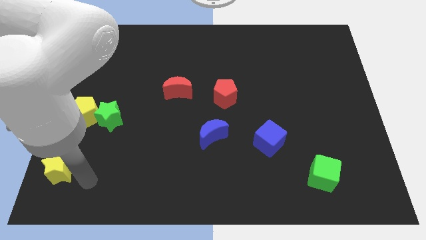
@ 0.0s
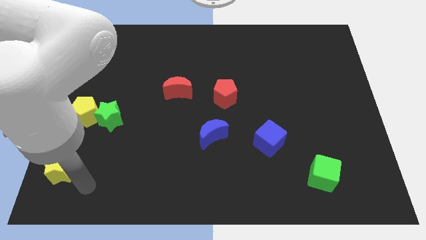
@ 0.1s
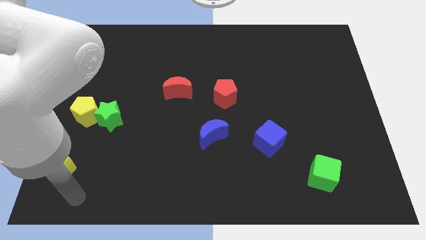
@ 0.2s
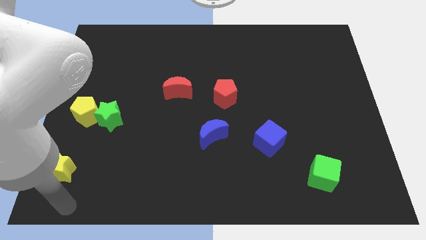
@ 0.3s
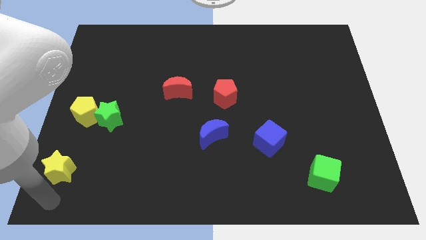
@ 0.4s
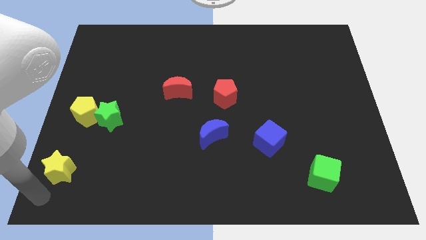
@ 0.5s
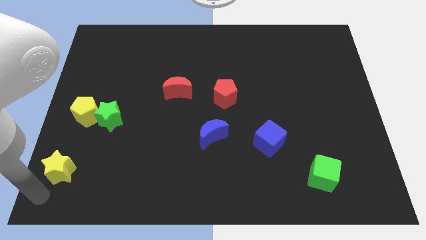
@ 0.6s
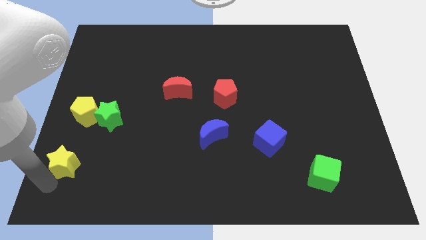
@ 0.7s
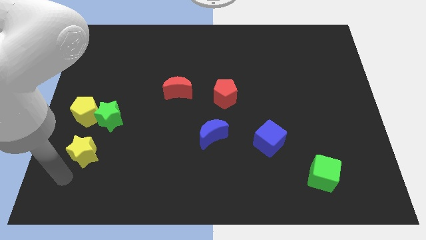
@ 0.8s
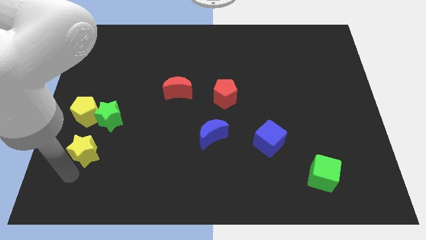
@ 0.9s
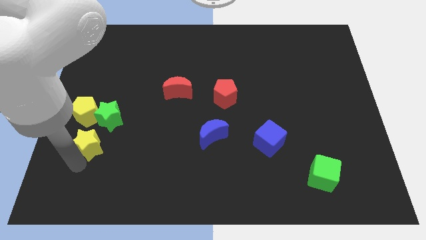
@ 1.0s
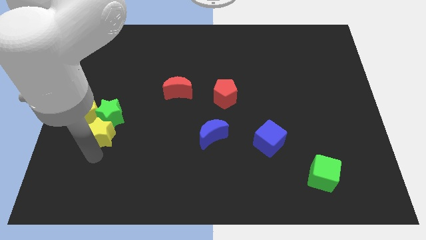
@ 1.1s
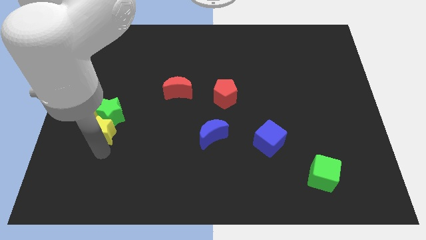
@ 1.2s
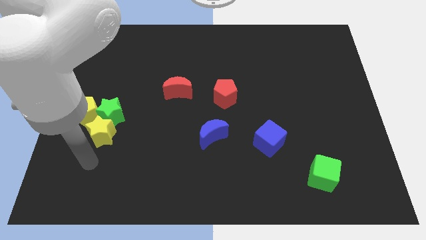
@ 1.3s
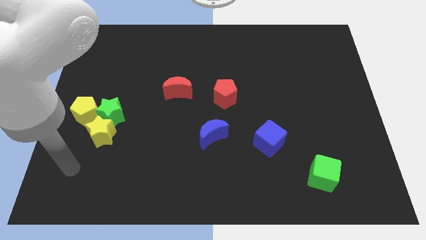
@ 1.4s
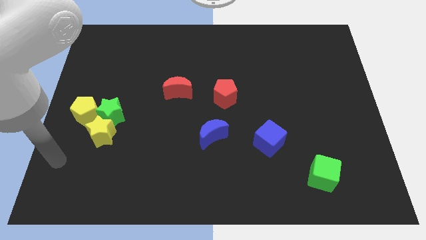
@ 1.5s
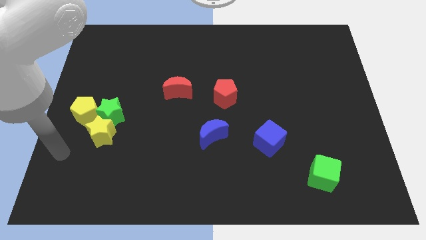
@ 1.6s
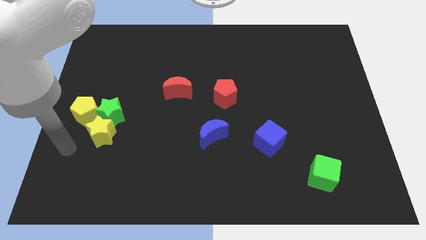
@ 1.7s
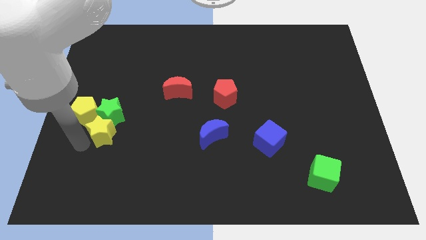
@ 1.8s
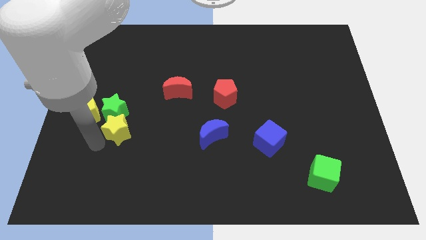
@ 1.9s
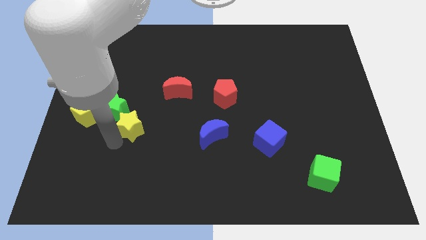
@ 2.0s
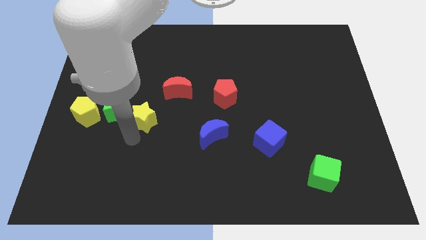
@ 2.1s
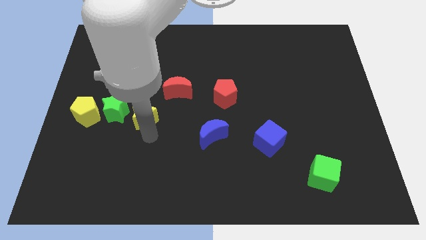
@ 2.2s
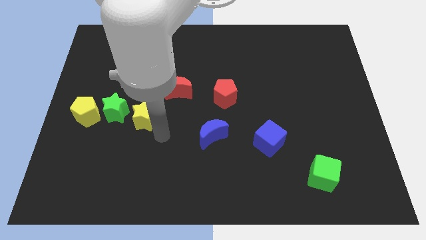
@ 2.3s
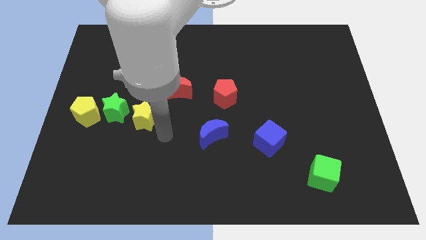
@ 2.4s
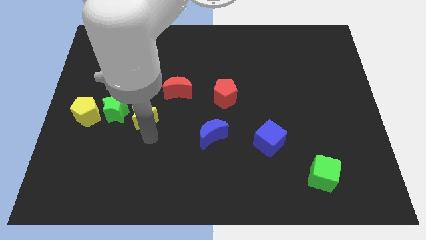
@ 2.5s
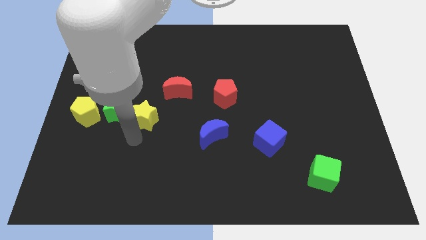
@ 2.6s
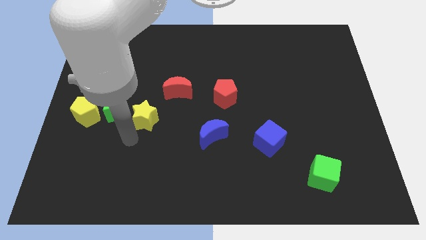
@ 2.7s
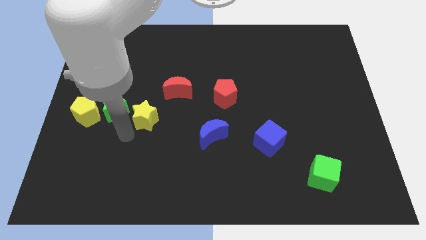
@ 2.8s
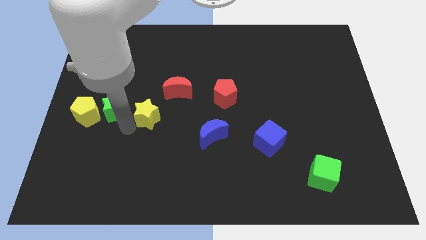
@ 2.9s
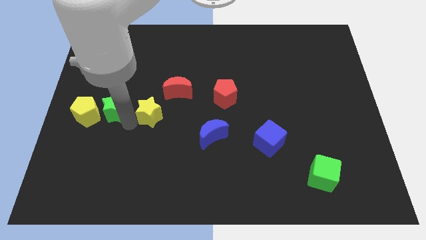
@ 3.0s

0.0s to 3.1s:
move yellow star to right of green star

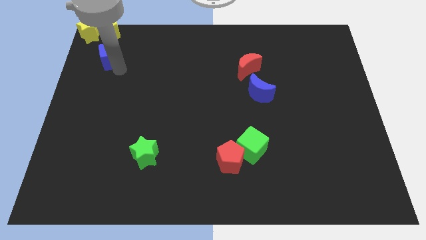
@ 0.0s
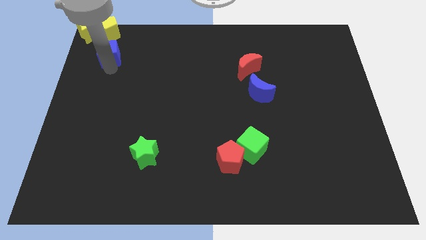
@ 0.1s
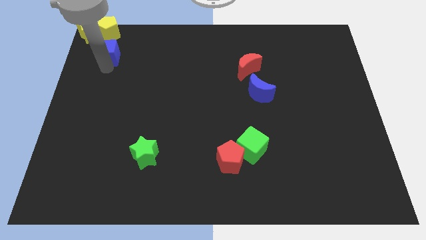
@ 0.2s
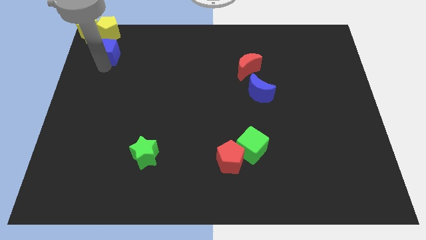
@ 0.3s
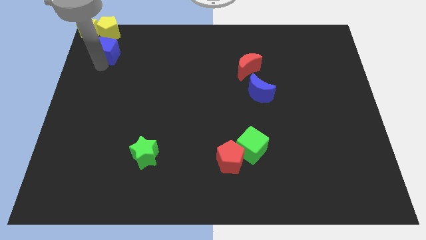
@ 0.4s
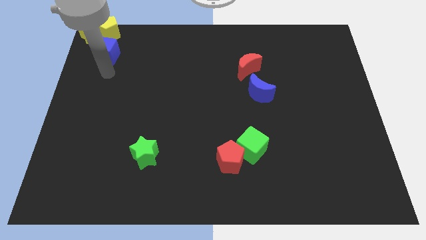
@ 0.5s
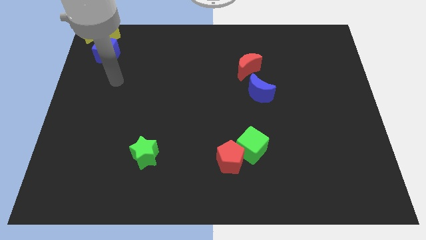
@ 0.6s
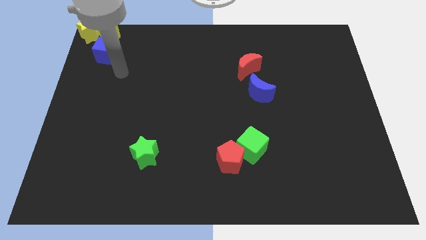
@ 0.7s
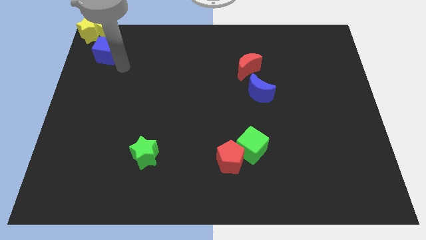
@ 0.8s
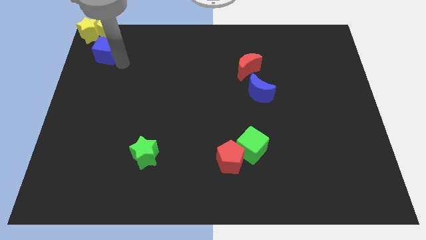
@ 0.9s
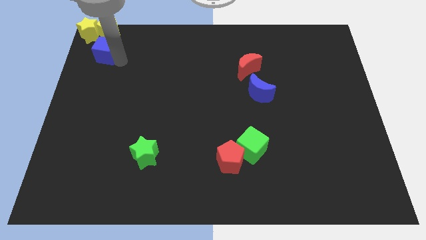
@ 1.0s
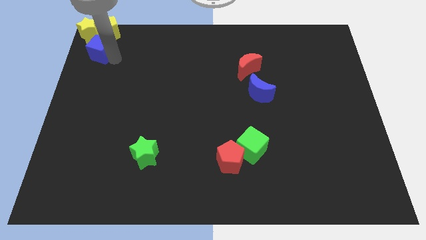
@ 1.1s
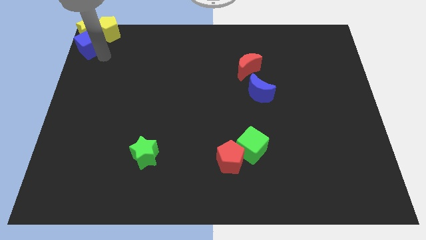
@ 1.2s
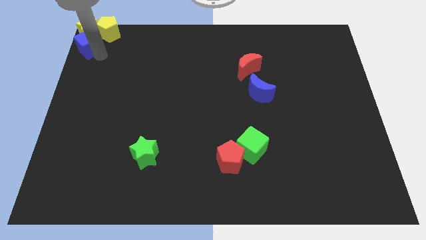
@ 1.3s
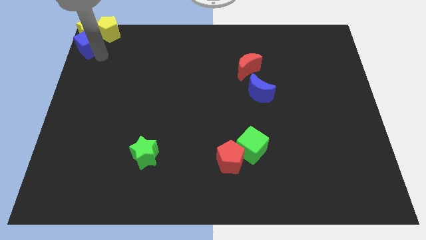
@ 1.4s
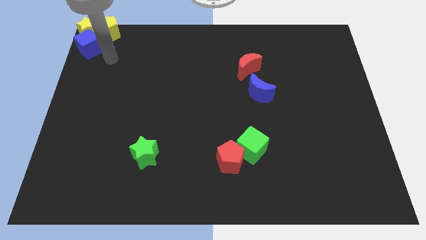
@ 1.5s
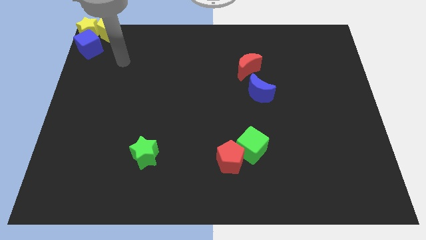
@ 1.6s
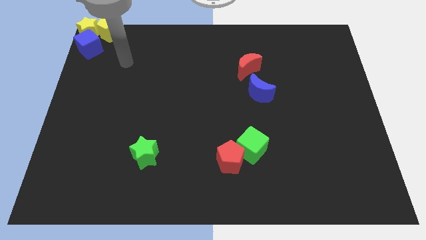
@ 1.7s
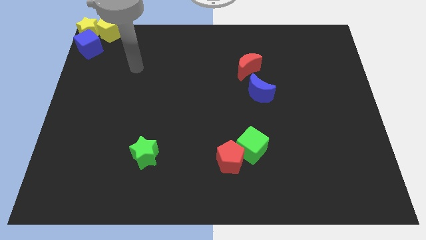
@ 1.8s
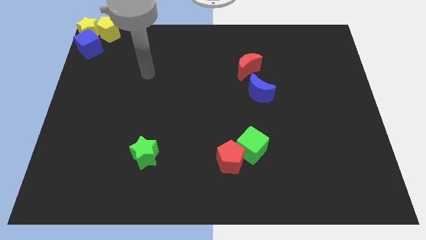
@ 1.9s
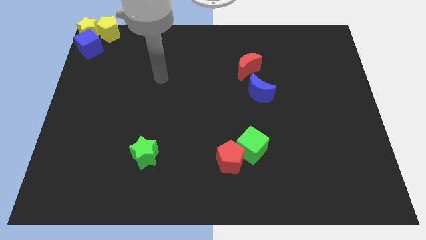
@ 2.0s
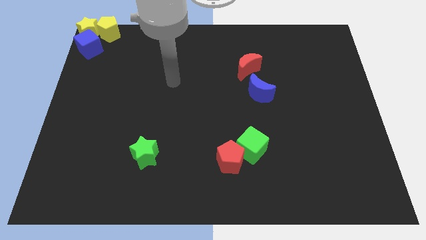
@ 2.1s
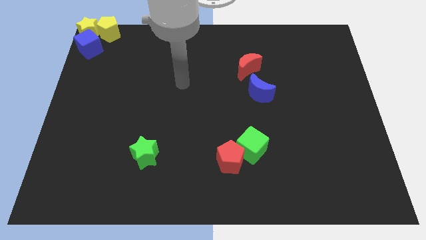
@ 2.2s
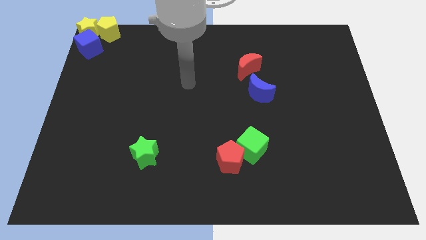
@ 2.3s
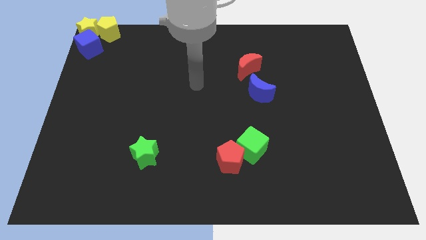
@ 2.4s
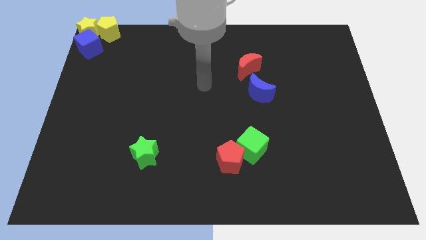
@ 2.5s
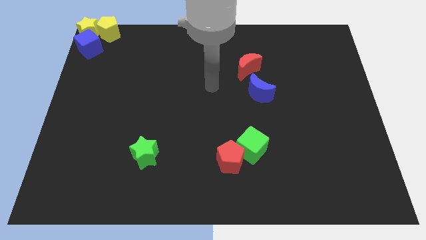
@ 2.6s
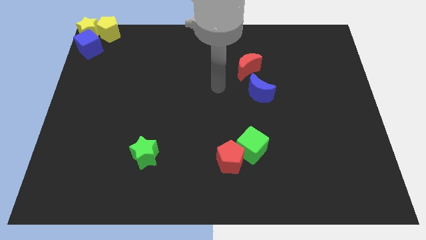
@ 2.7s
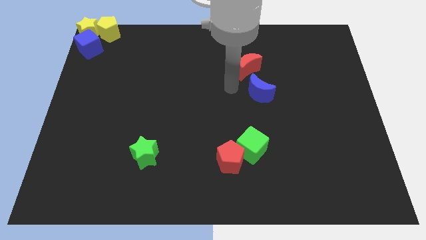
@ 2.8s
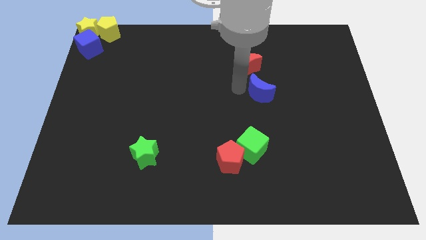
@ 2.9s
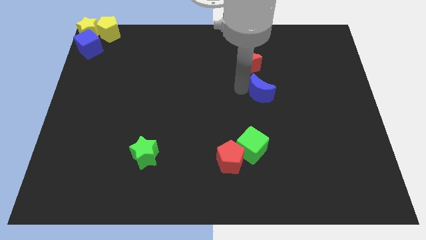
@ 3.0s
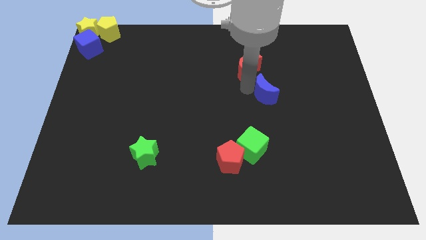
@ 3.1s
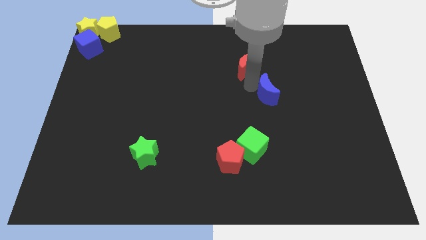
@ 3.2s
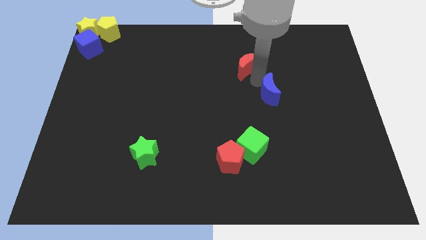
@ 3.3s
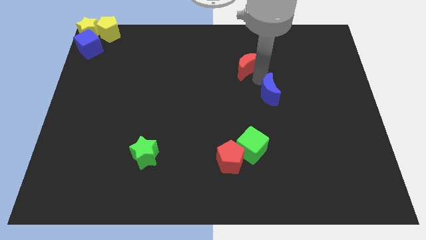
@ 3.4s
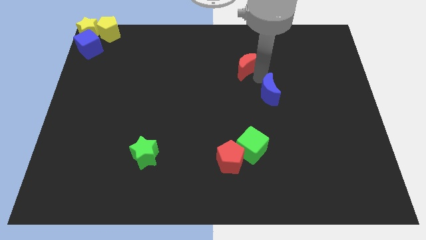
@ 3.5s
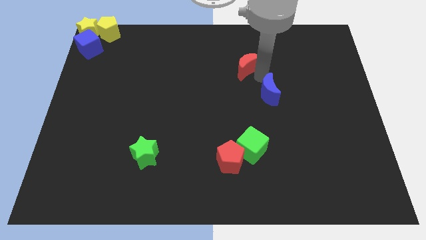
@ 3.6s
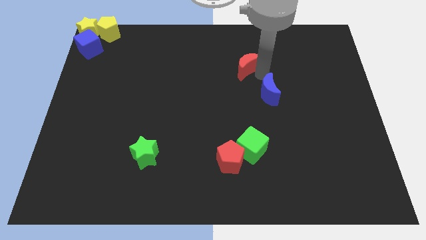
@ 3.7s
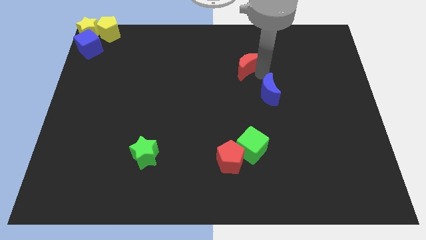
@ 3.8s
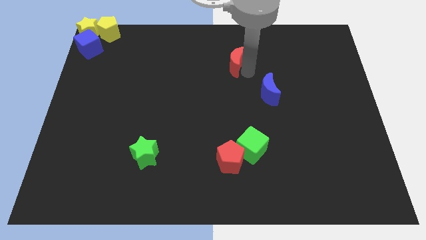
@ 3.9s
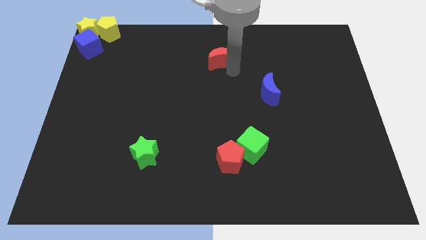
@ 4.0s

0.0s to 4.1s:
separate the red moon and blue moon

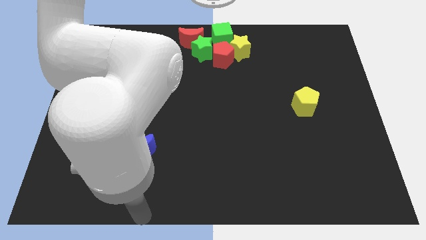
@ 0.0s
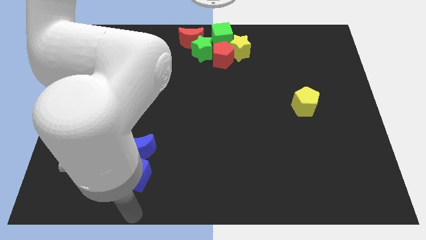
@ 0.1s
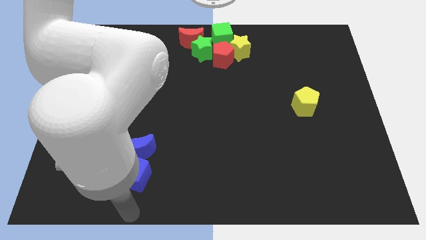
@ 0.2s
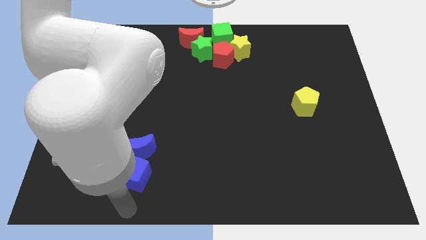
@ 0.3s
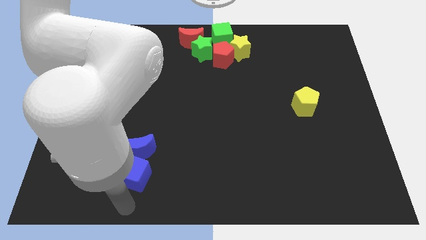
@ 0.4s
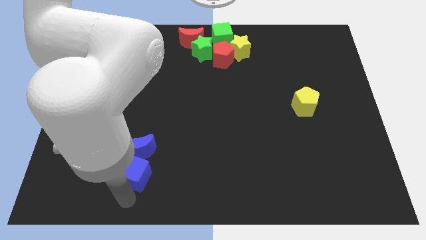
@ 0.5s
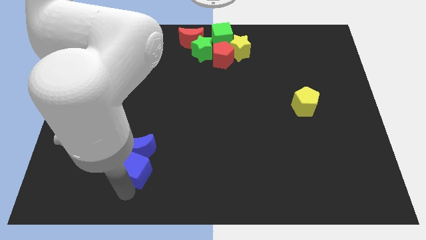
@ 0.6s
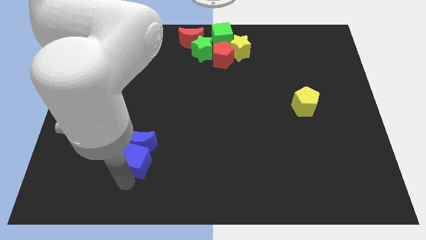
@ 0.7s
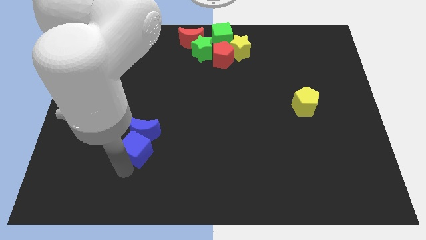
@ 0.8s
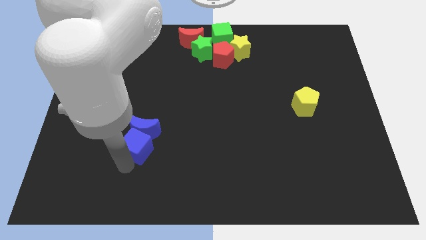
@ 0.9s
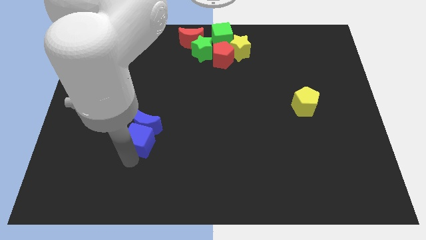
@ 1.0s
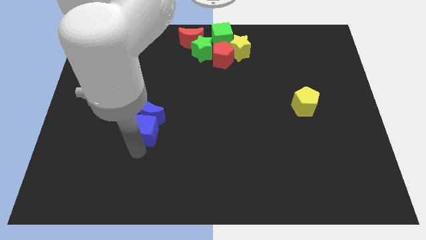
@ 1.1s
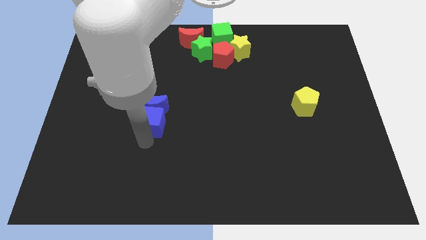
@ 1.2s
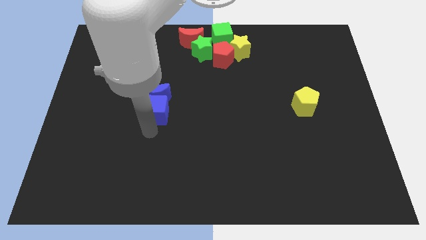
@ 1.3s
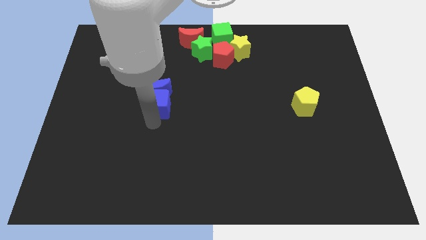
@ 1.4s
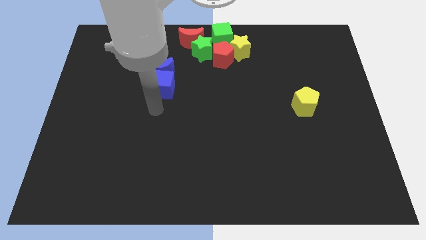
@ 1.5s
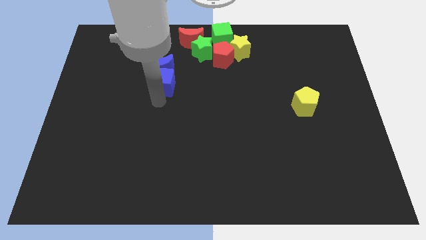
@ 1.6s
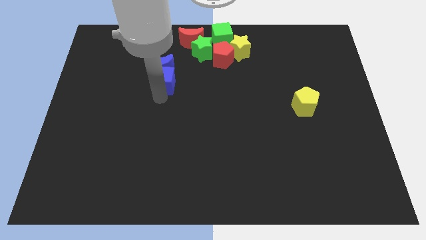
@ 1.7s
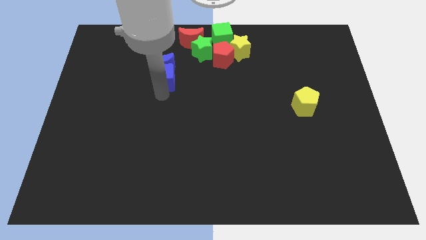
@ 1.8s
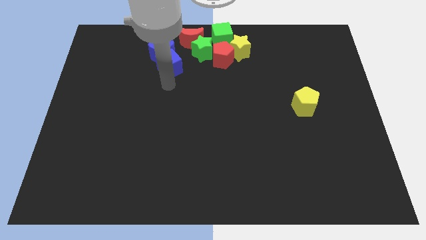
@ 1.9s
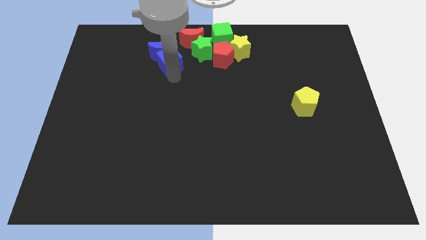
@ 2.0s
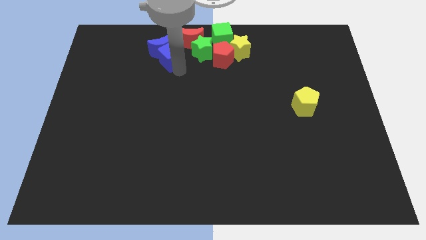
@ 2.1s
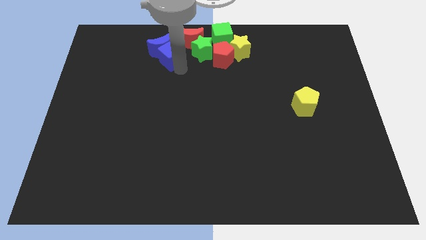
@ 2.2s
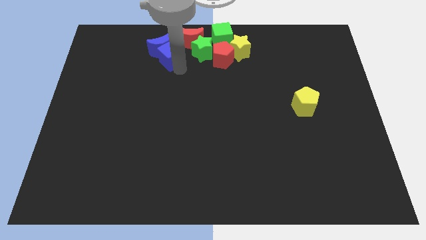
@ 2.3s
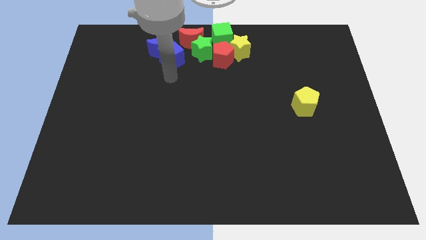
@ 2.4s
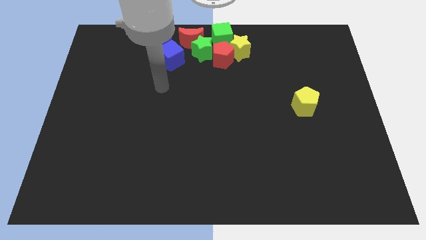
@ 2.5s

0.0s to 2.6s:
push the blue blocks into the group of blocks
